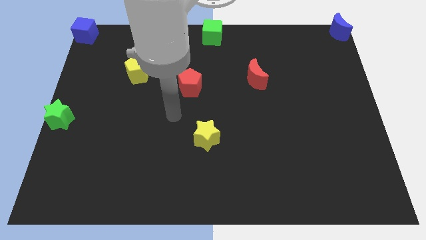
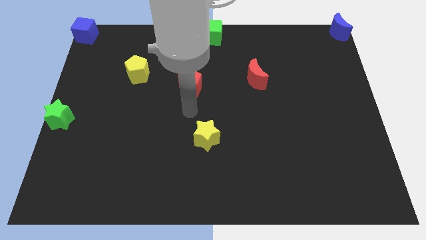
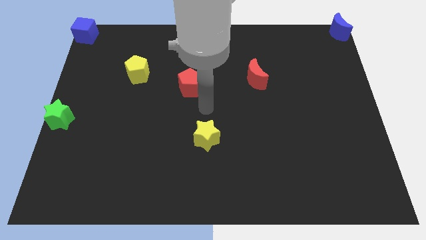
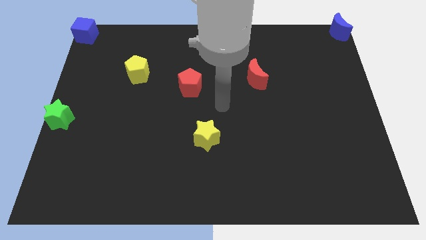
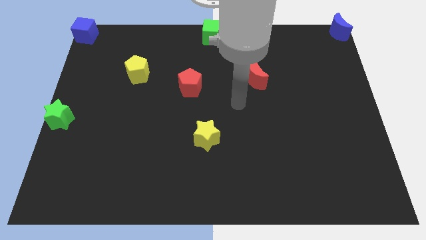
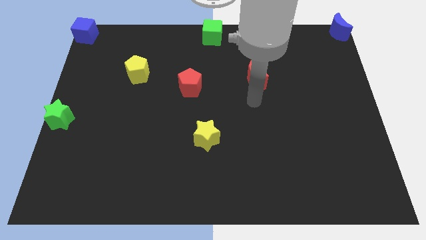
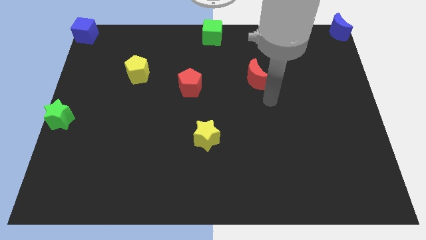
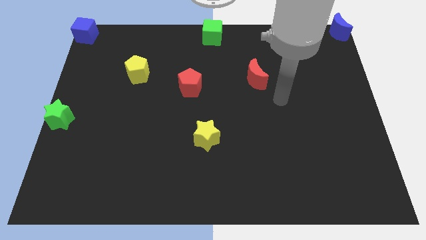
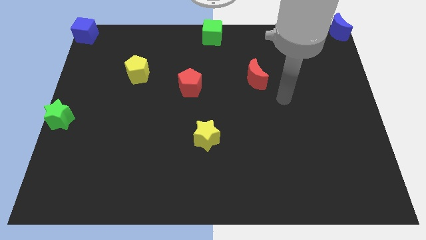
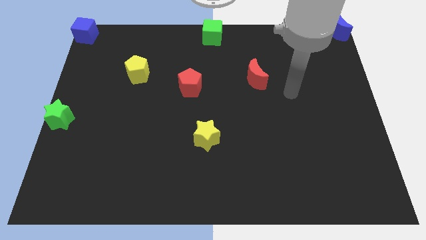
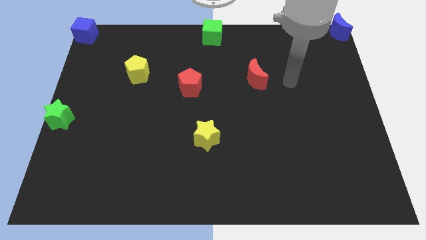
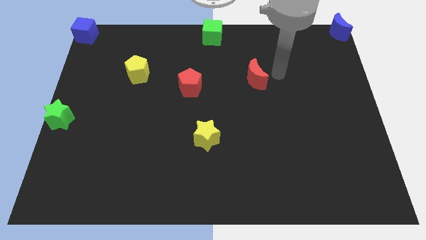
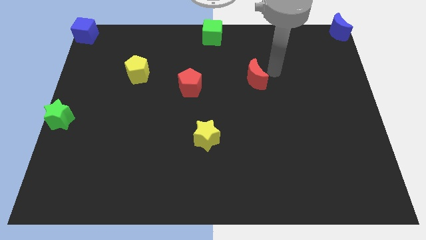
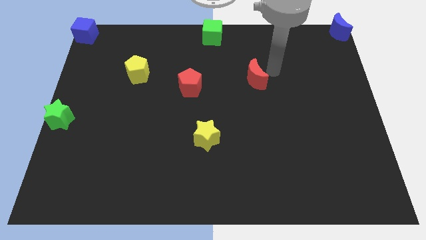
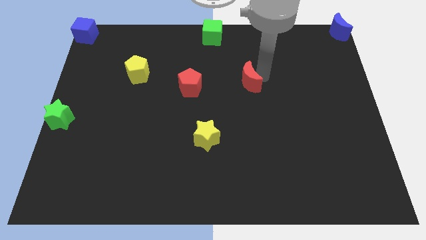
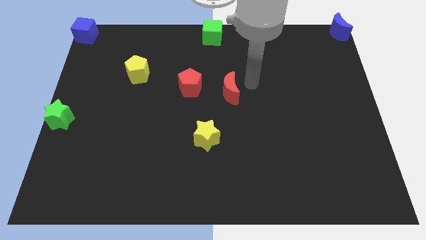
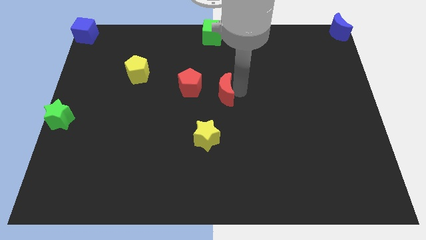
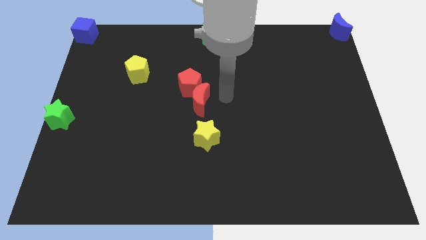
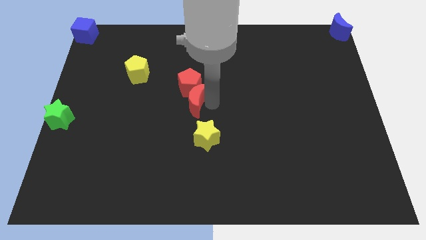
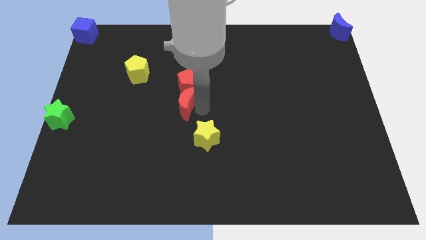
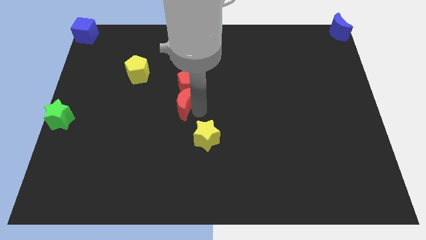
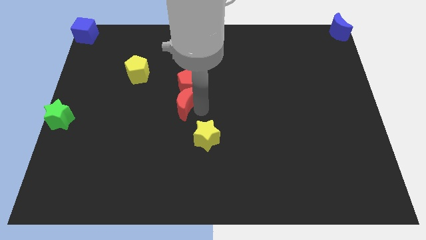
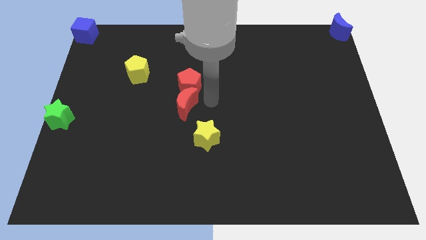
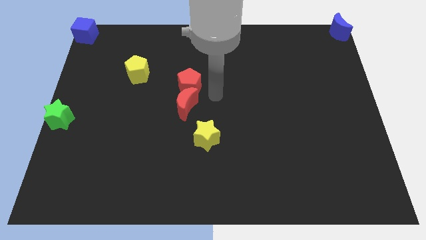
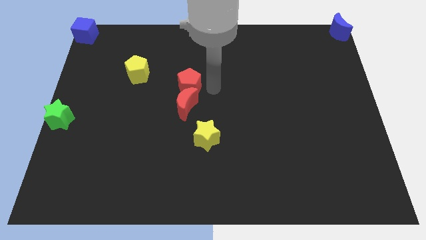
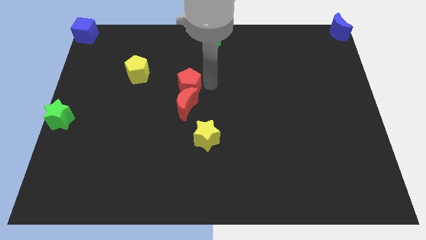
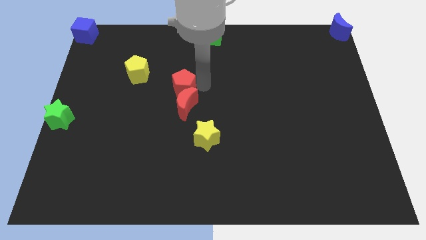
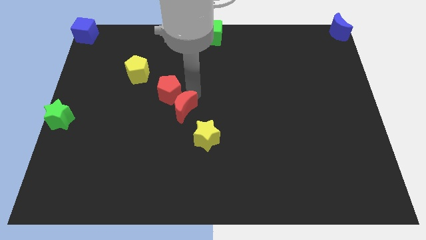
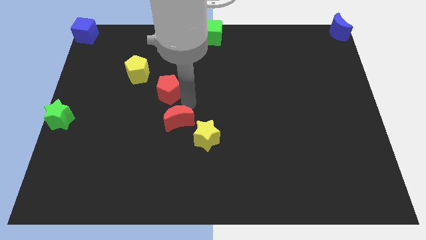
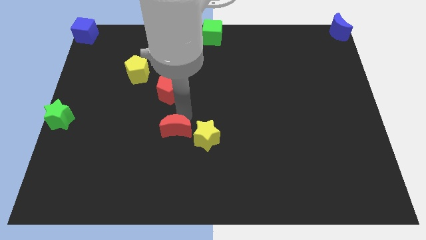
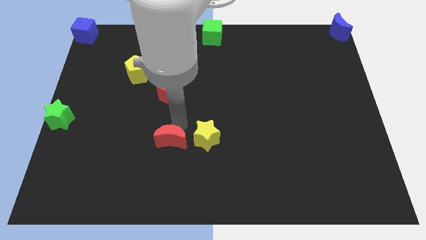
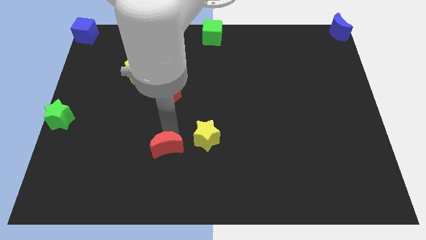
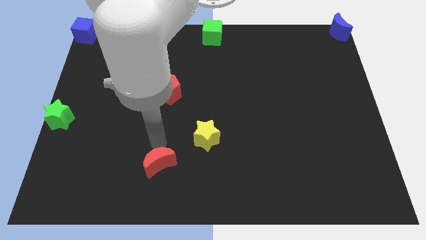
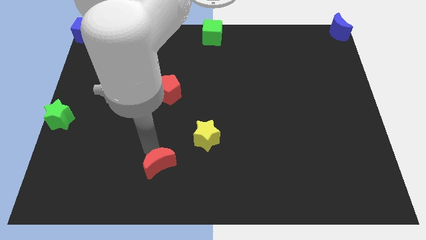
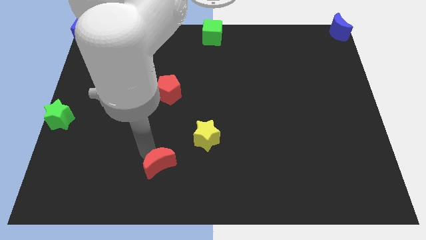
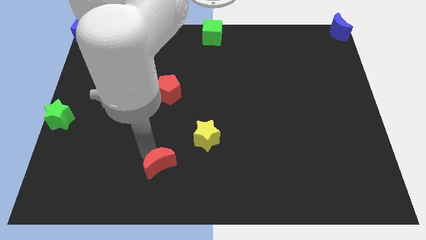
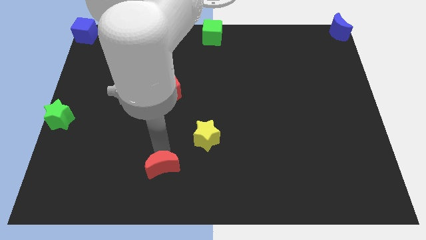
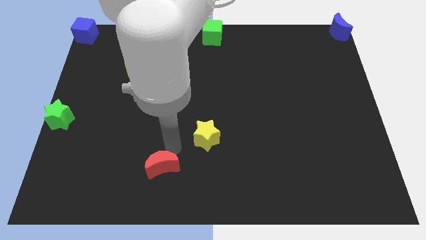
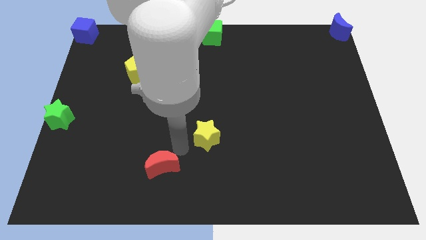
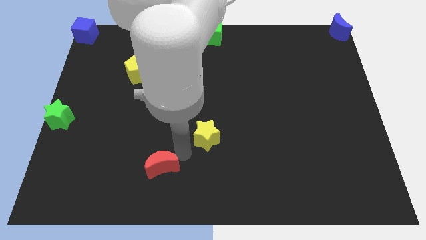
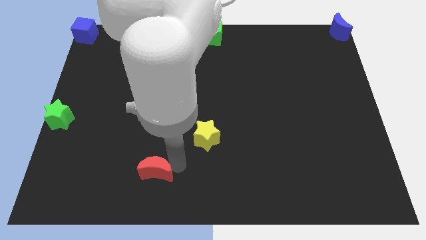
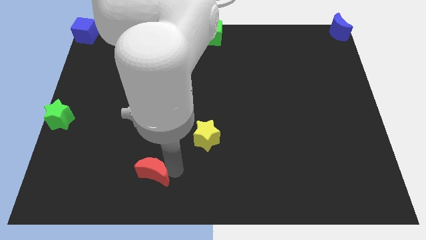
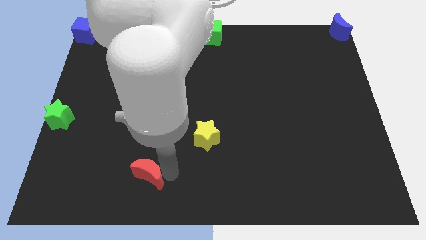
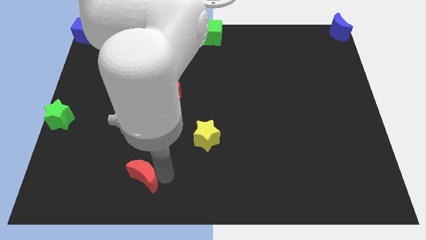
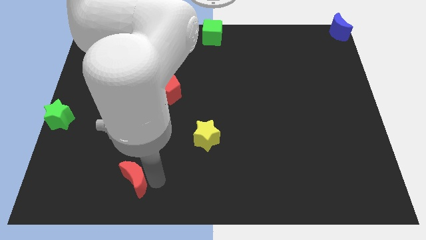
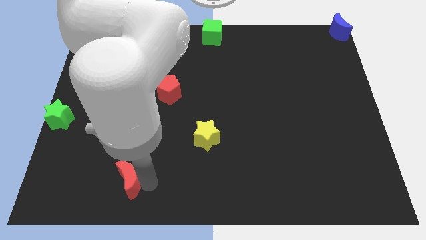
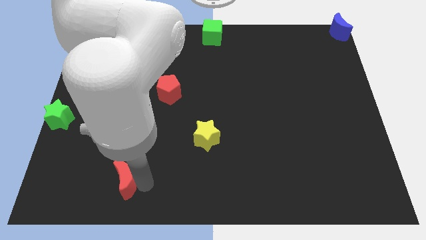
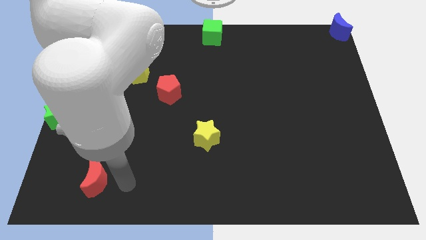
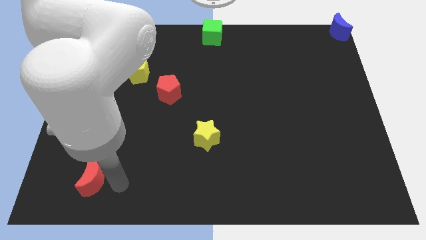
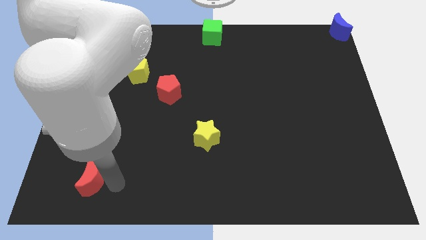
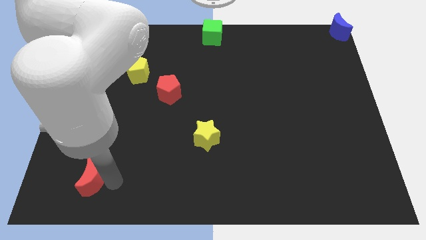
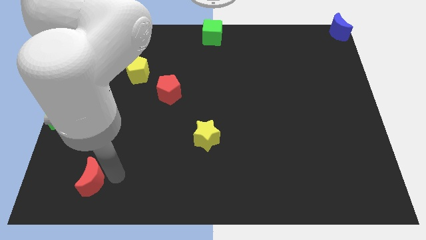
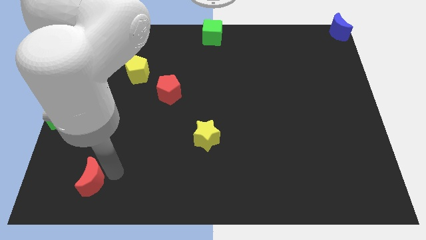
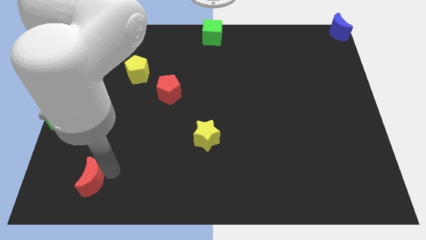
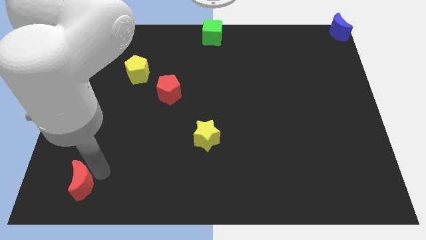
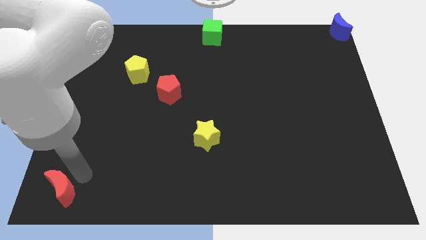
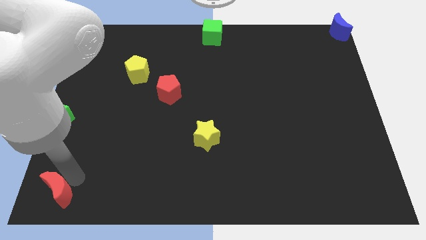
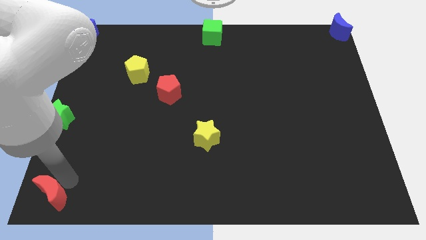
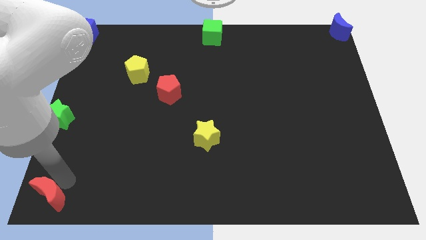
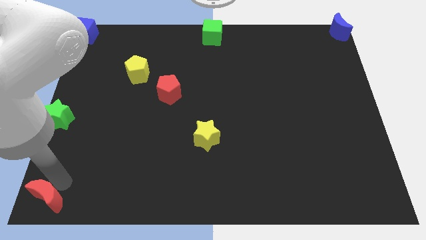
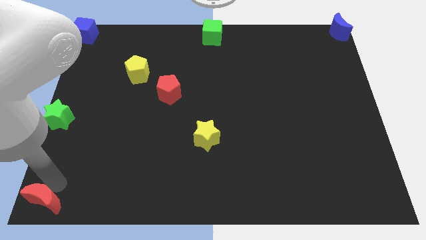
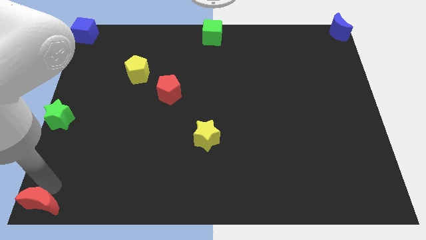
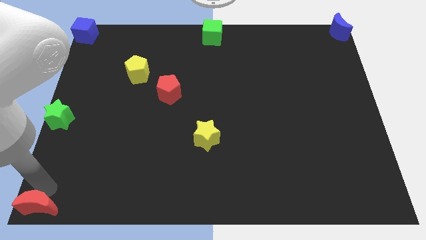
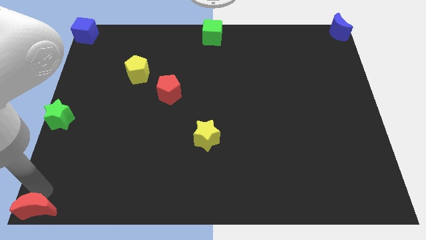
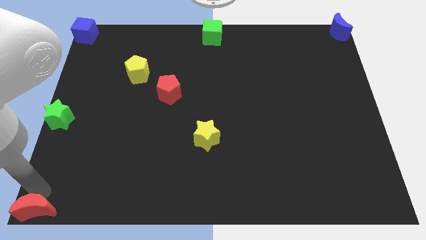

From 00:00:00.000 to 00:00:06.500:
place the red crescent to the bottom left

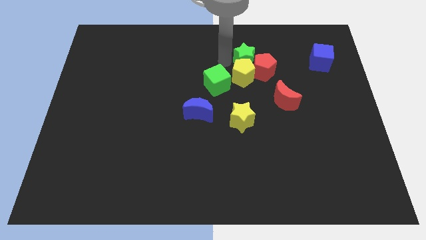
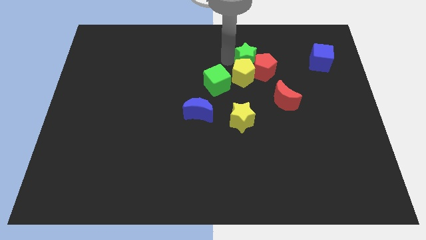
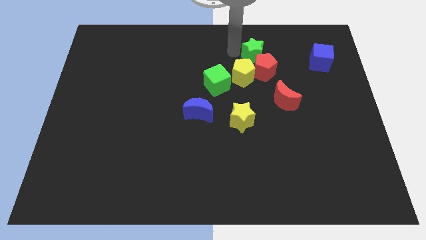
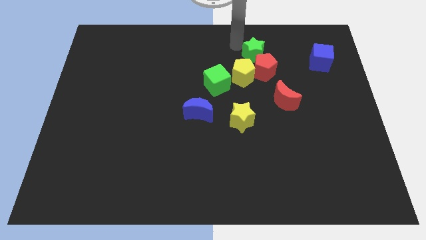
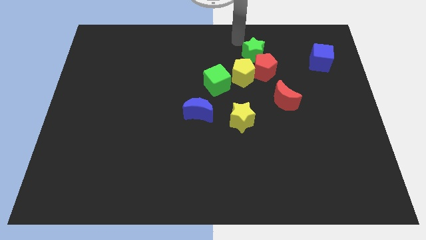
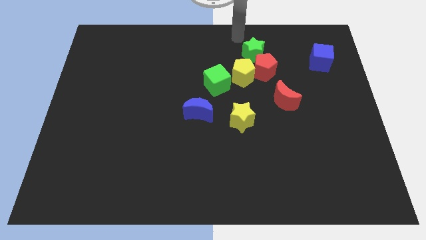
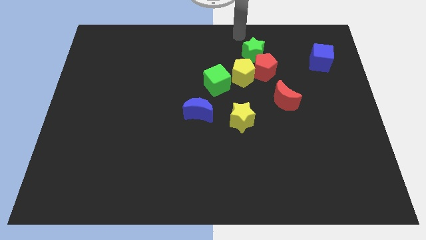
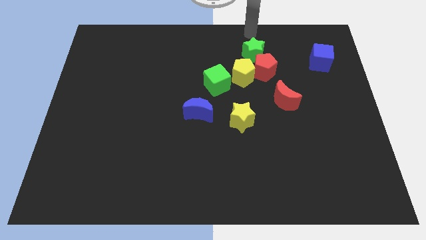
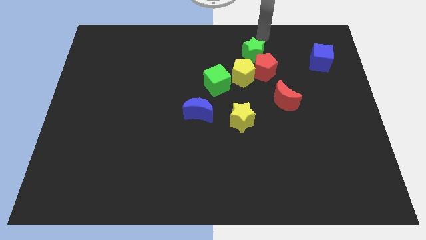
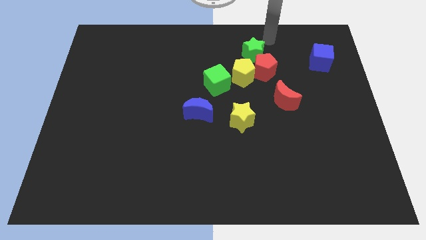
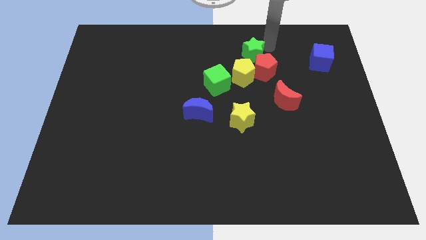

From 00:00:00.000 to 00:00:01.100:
move the green star slightly to the top left side of the red pentagon

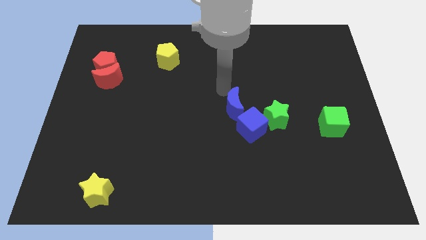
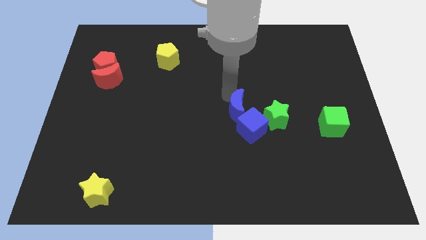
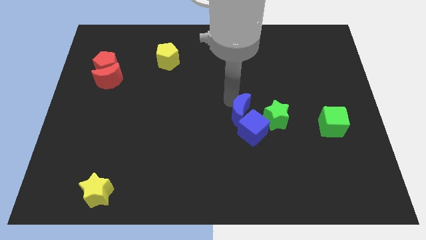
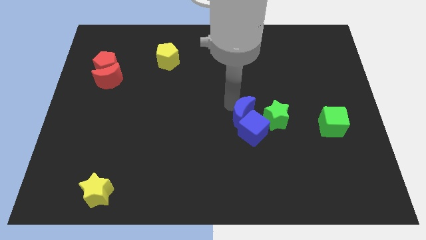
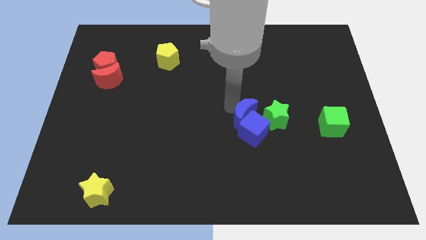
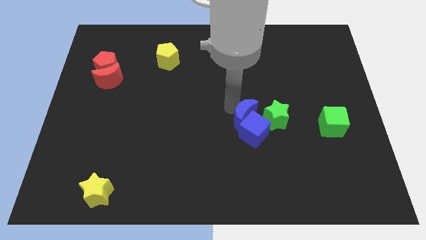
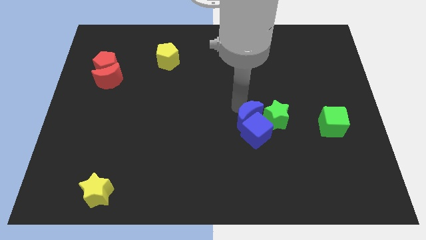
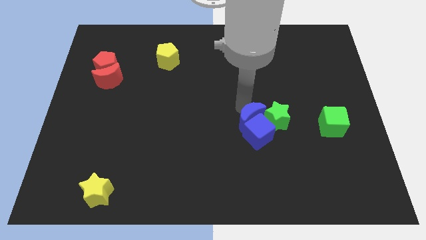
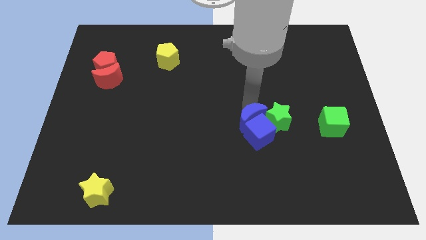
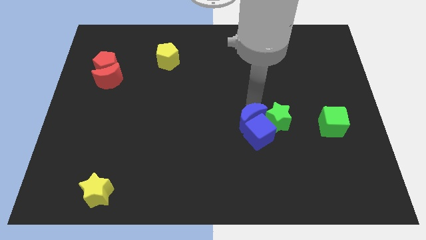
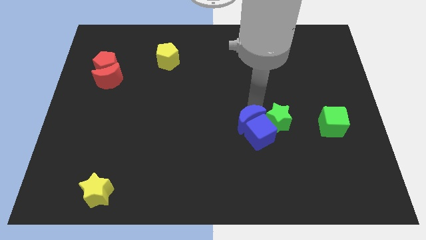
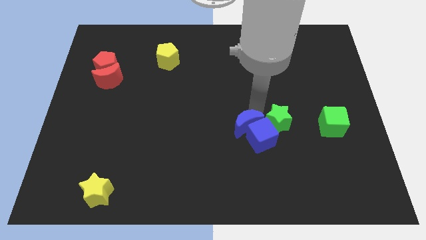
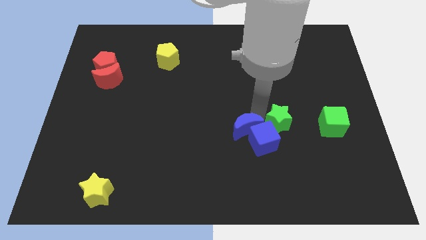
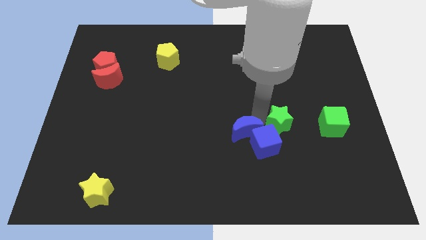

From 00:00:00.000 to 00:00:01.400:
push the blue crescent into the blue cube and green star
